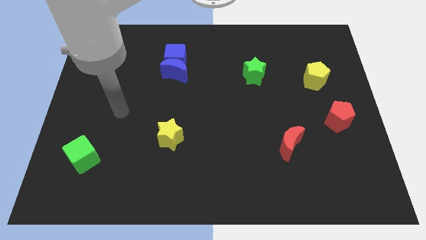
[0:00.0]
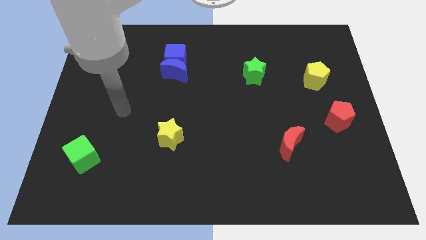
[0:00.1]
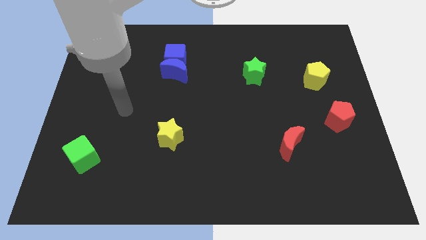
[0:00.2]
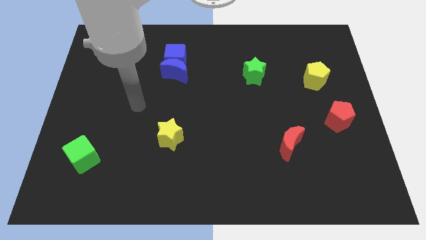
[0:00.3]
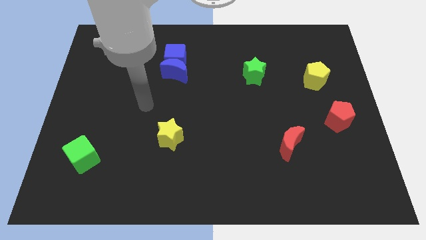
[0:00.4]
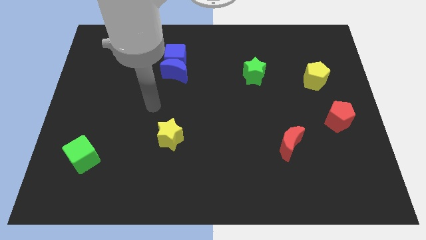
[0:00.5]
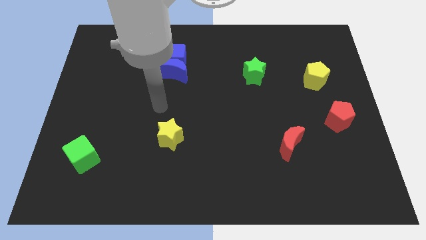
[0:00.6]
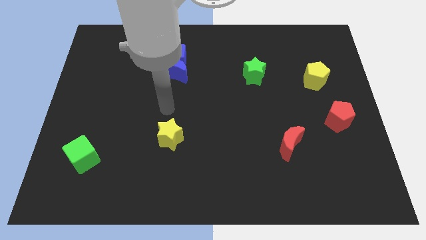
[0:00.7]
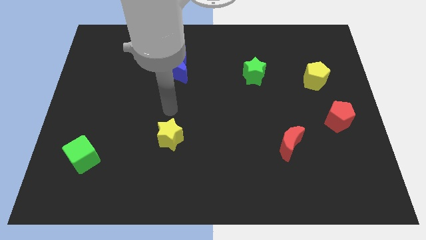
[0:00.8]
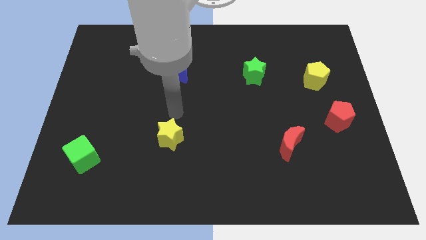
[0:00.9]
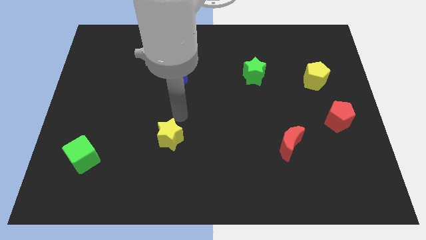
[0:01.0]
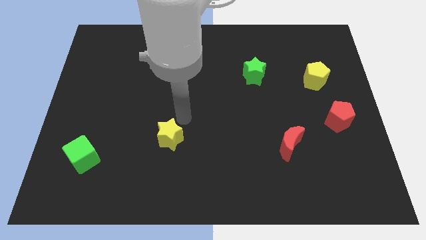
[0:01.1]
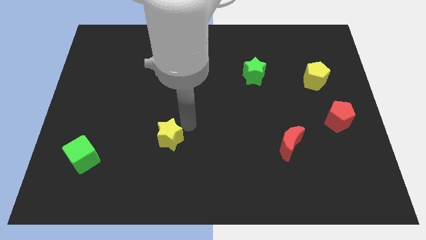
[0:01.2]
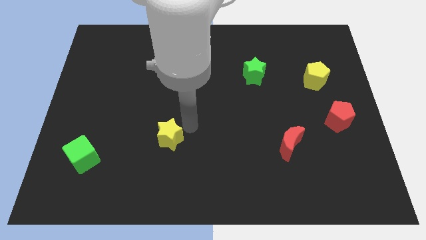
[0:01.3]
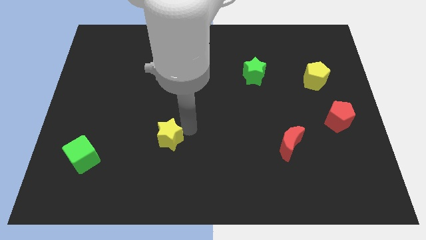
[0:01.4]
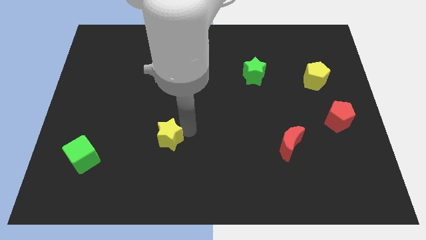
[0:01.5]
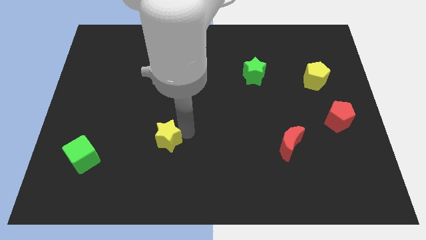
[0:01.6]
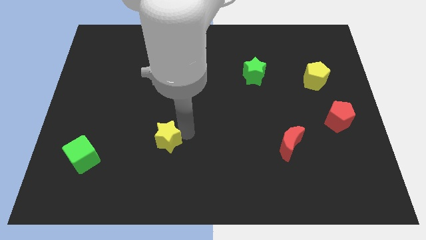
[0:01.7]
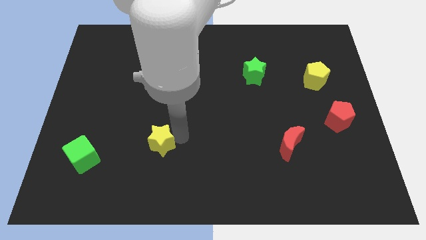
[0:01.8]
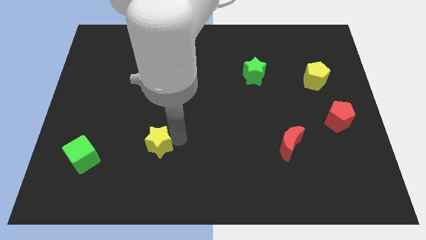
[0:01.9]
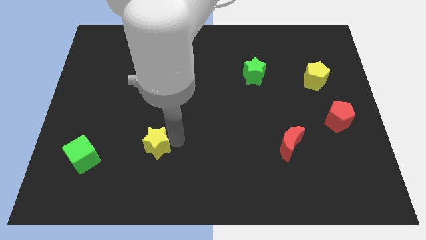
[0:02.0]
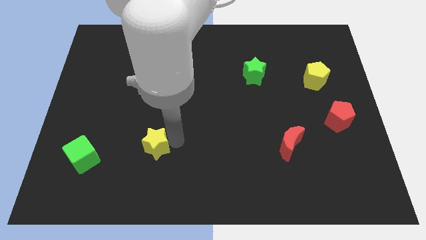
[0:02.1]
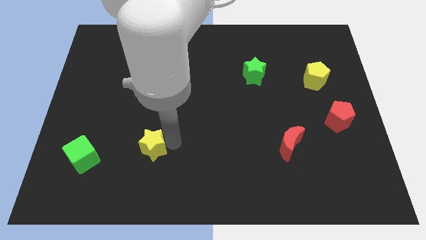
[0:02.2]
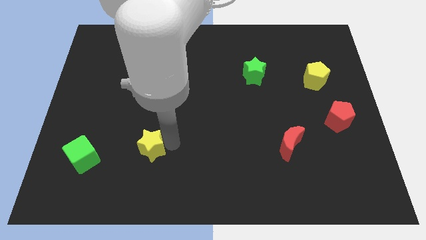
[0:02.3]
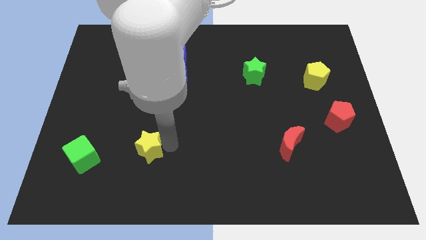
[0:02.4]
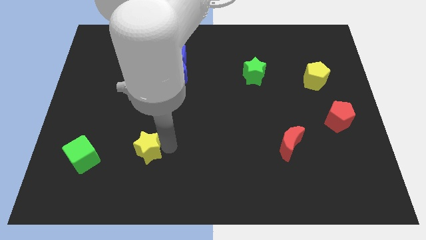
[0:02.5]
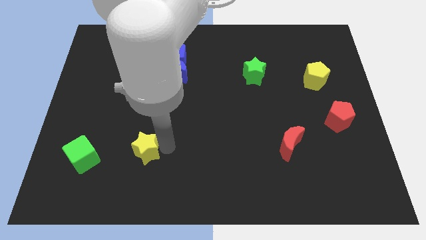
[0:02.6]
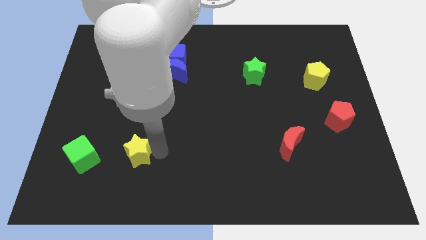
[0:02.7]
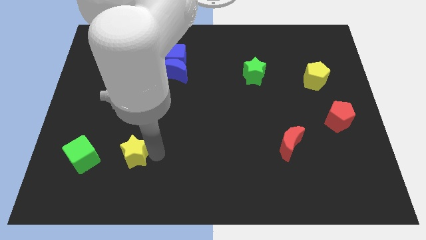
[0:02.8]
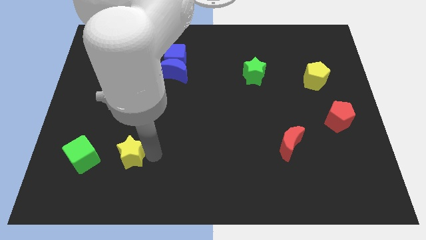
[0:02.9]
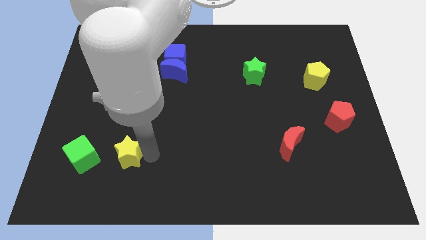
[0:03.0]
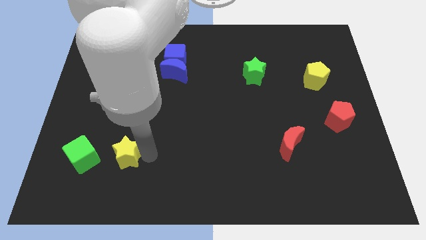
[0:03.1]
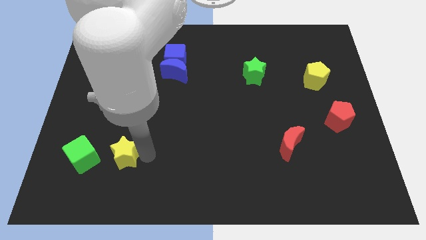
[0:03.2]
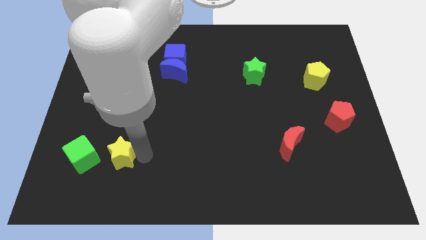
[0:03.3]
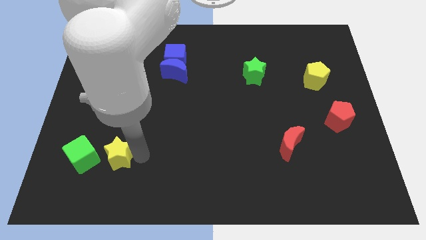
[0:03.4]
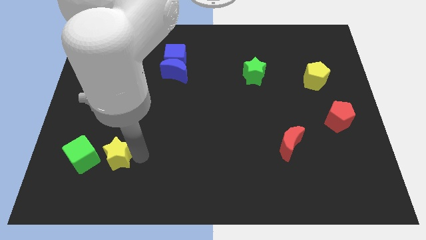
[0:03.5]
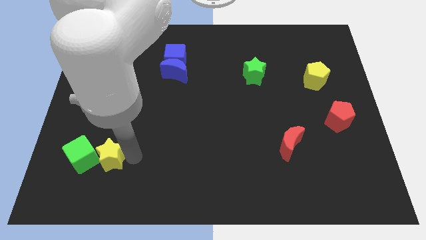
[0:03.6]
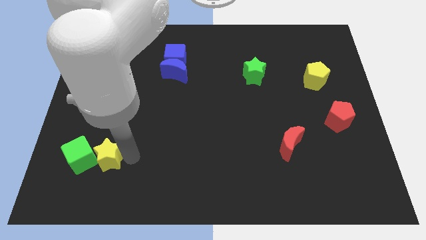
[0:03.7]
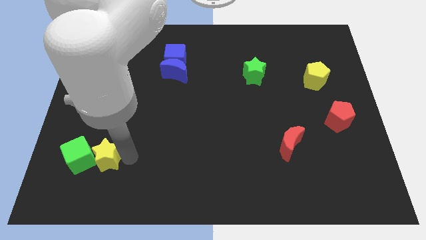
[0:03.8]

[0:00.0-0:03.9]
move the yellow star next to the green cube

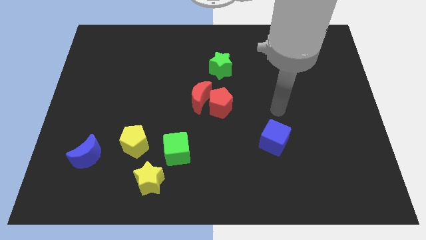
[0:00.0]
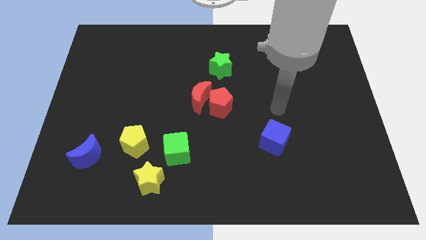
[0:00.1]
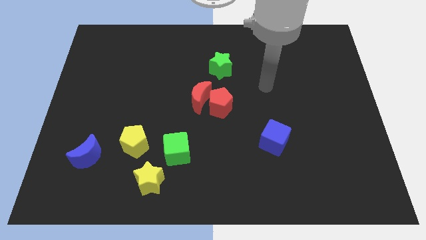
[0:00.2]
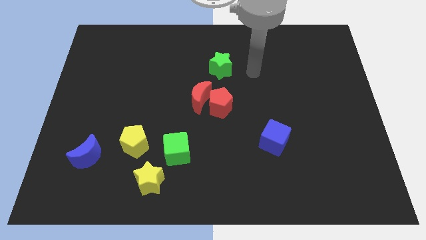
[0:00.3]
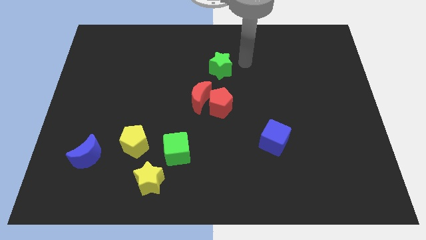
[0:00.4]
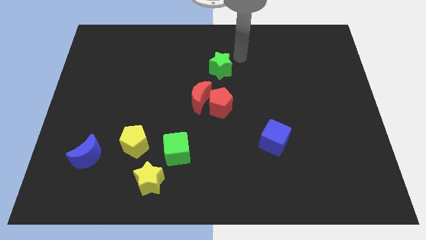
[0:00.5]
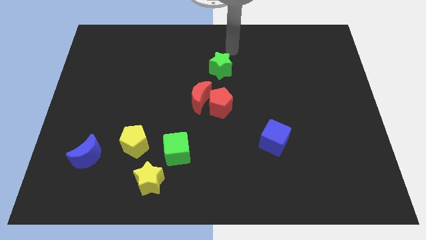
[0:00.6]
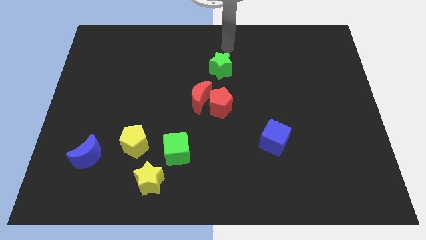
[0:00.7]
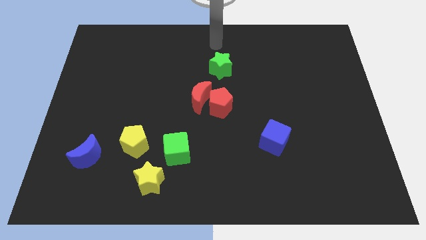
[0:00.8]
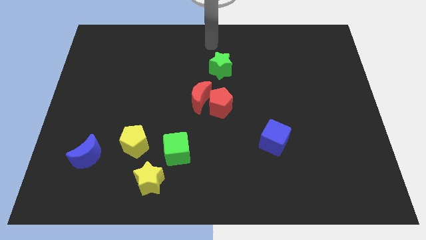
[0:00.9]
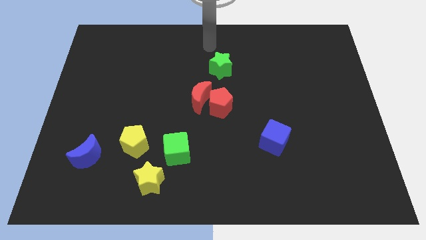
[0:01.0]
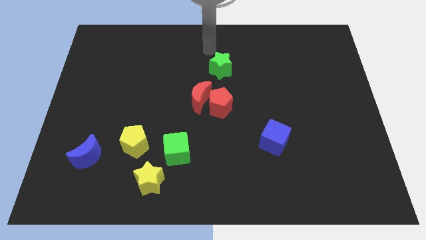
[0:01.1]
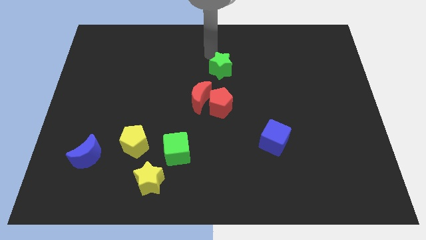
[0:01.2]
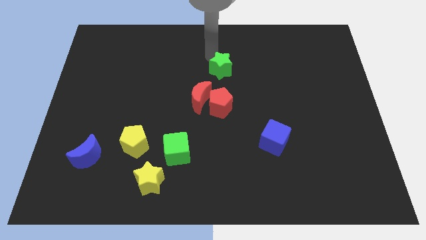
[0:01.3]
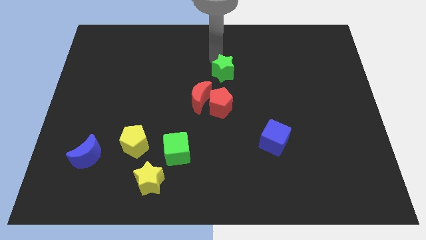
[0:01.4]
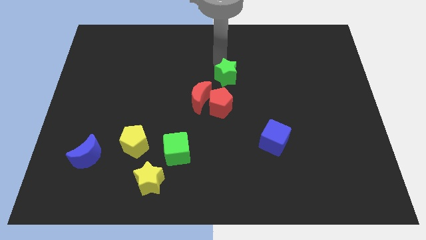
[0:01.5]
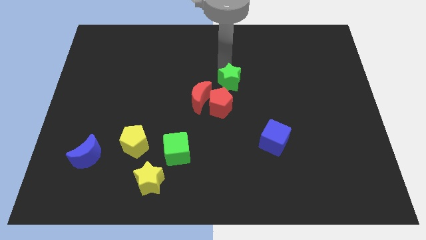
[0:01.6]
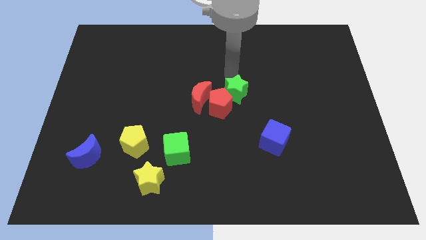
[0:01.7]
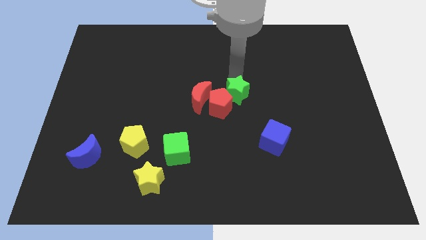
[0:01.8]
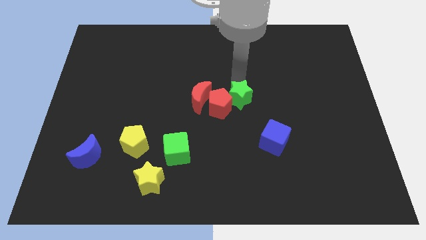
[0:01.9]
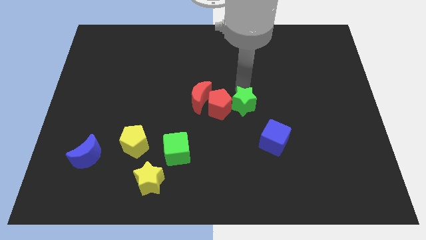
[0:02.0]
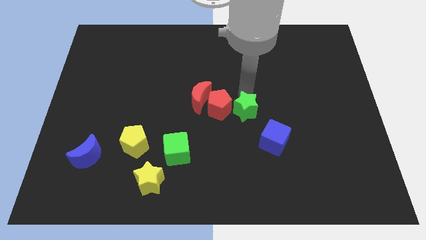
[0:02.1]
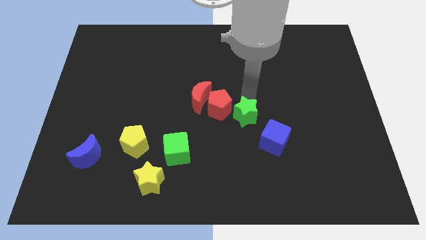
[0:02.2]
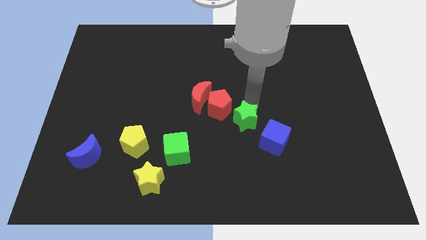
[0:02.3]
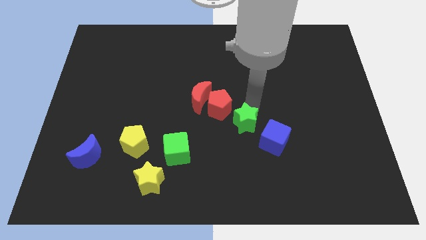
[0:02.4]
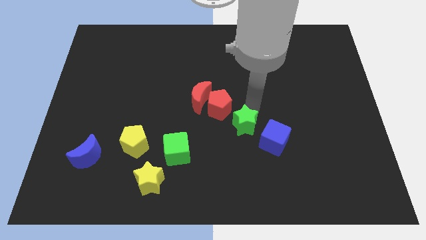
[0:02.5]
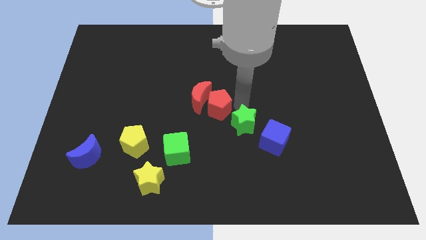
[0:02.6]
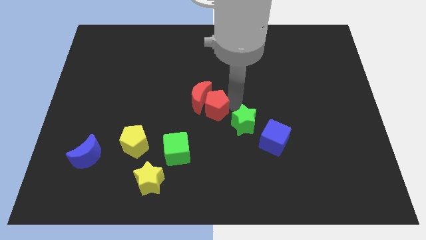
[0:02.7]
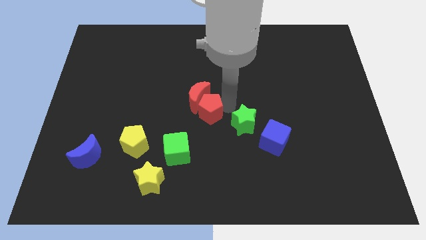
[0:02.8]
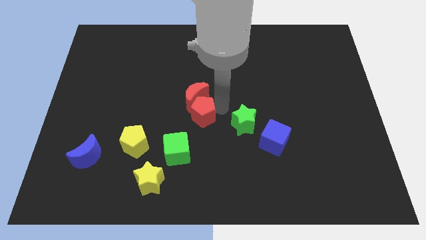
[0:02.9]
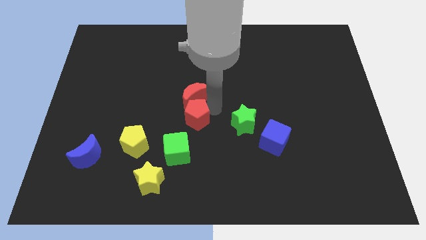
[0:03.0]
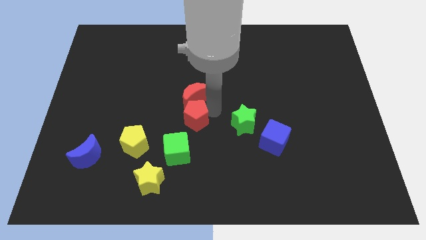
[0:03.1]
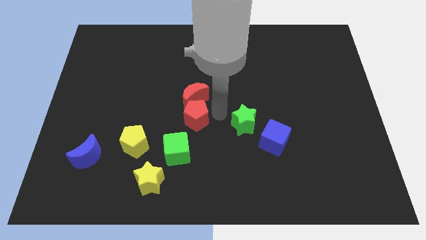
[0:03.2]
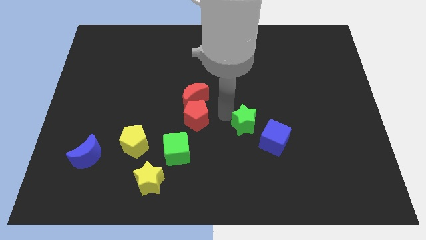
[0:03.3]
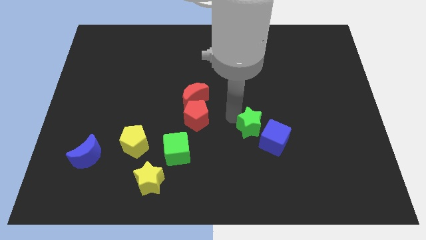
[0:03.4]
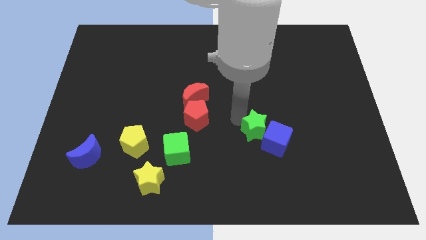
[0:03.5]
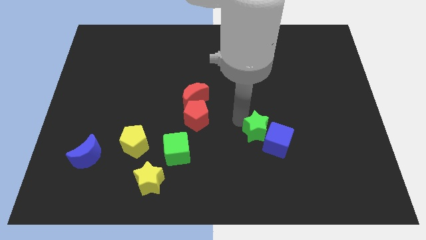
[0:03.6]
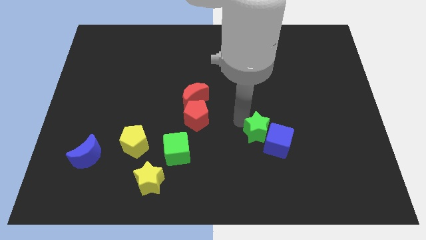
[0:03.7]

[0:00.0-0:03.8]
put the green star towards the blue cube

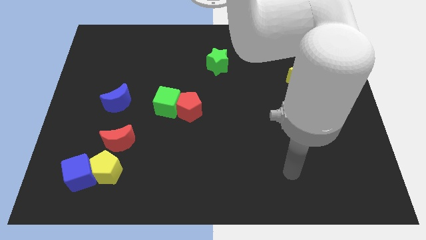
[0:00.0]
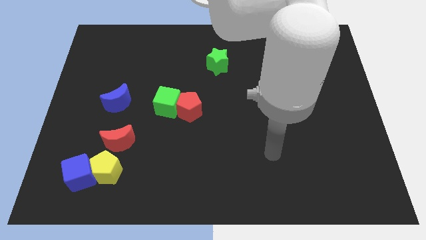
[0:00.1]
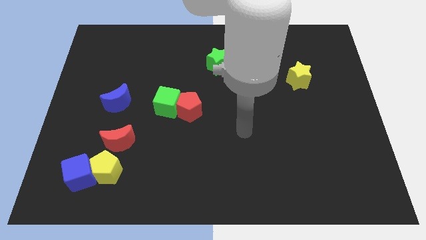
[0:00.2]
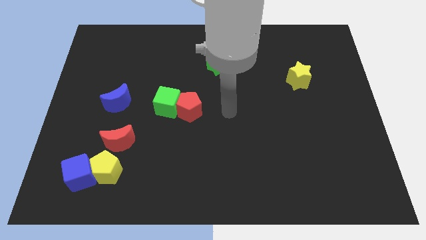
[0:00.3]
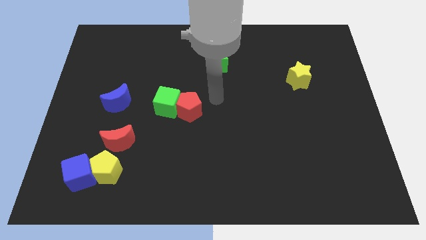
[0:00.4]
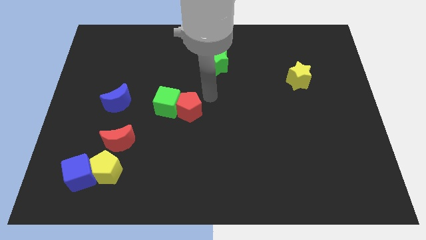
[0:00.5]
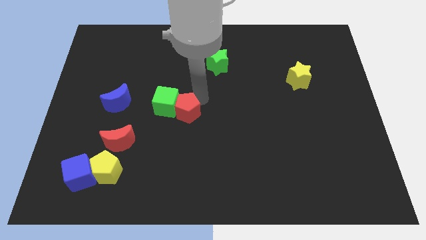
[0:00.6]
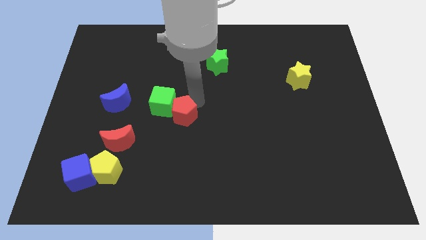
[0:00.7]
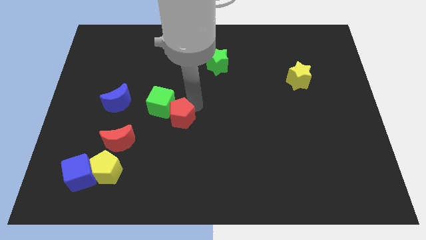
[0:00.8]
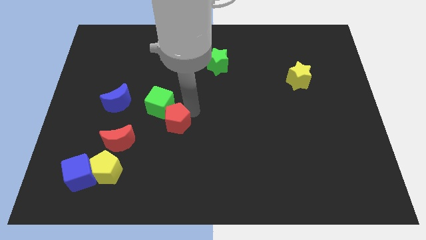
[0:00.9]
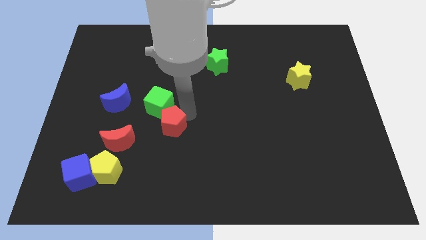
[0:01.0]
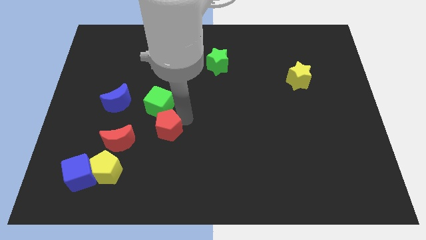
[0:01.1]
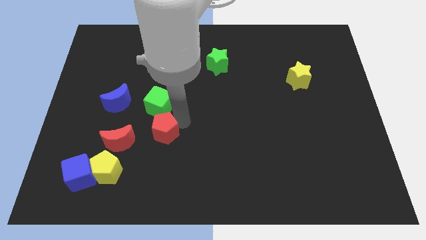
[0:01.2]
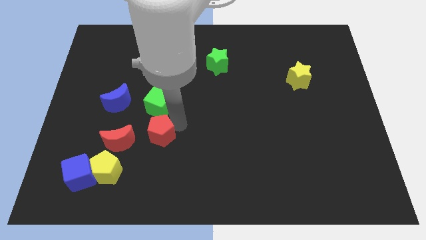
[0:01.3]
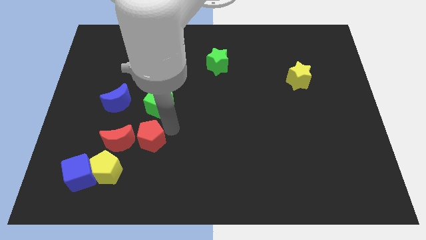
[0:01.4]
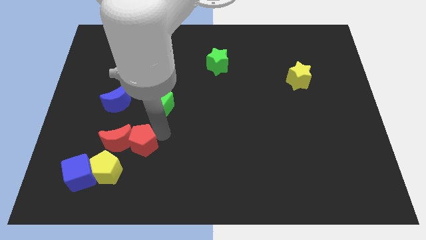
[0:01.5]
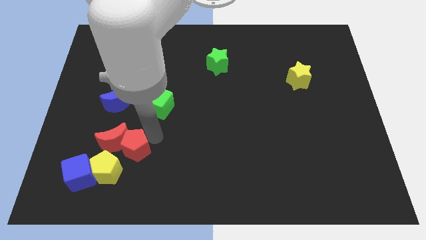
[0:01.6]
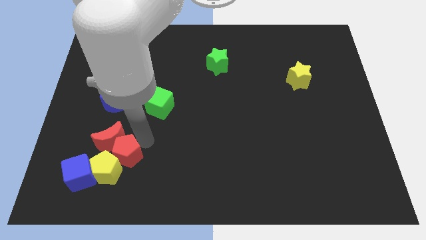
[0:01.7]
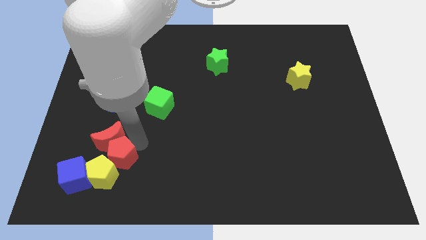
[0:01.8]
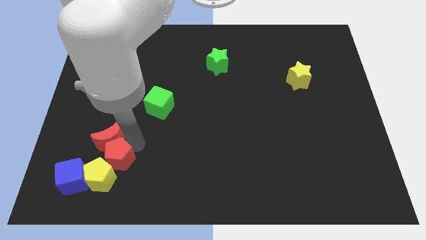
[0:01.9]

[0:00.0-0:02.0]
push the red pentagon close to the yellow pentagon
